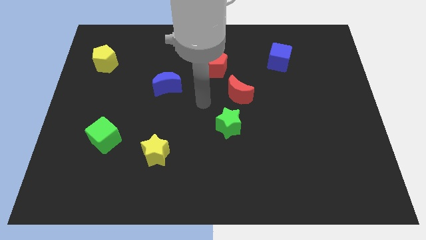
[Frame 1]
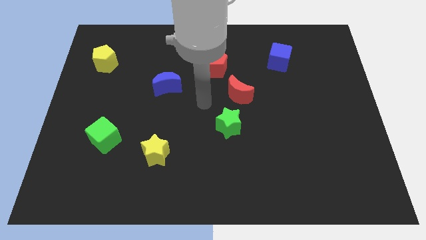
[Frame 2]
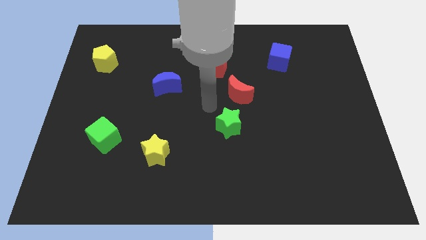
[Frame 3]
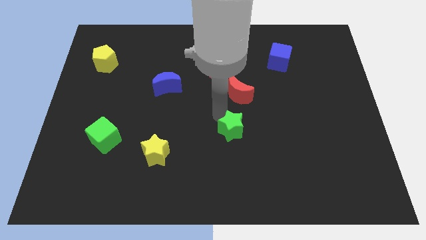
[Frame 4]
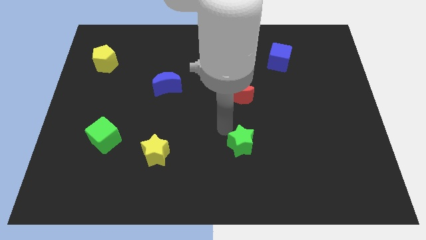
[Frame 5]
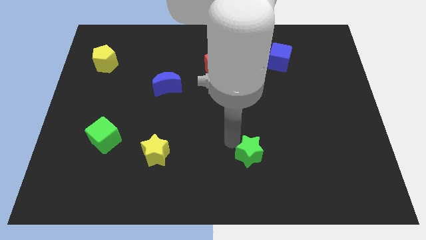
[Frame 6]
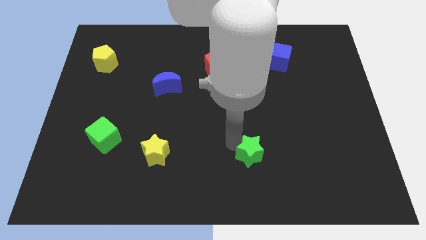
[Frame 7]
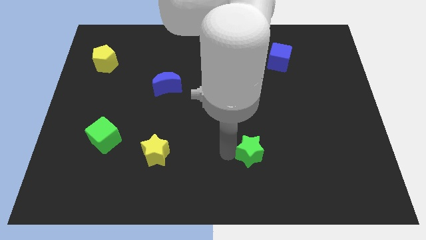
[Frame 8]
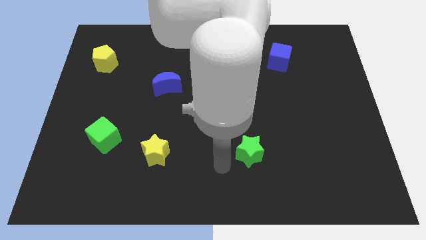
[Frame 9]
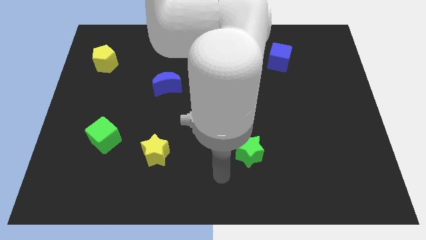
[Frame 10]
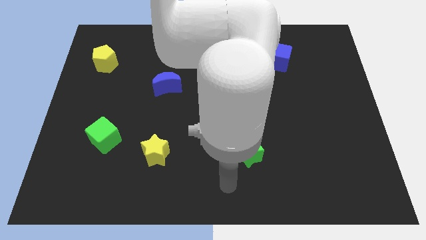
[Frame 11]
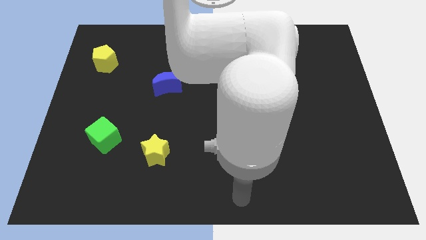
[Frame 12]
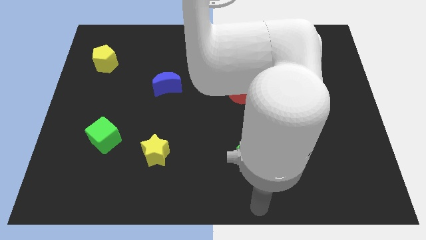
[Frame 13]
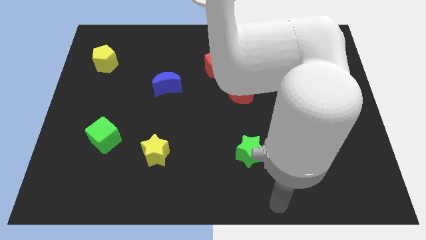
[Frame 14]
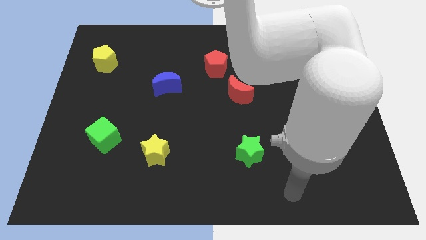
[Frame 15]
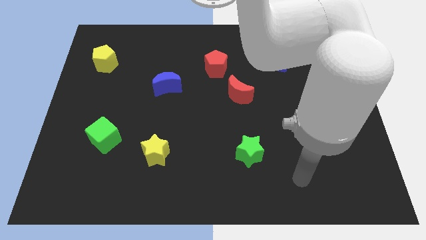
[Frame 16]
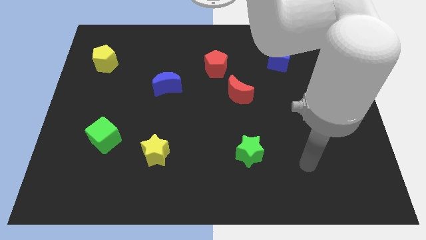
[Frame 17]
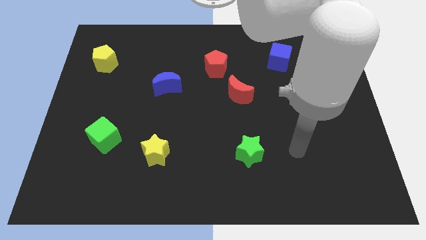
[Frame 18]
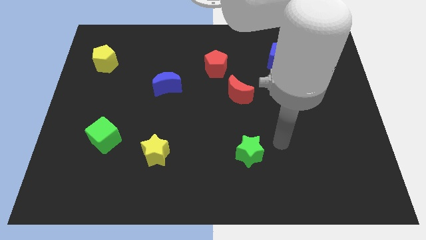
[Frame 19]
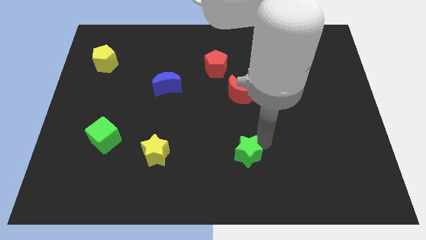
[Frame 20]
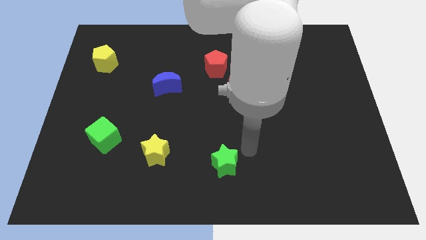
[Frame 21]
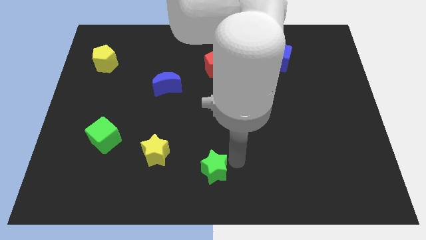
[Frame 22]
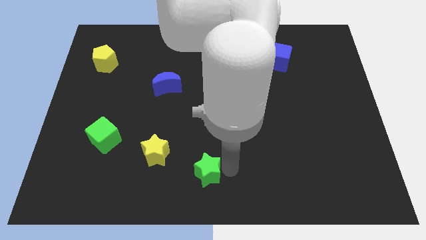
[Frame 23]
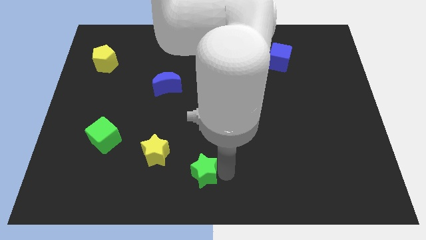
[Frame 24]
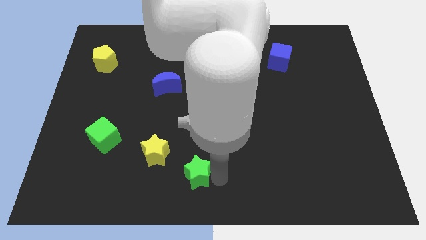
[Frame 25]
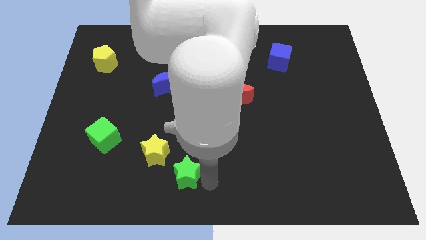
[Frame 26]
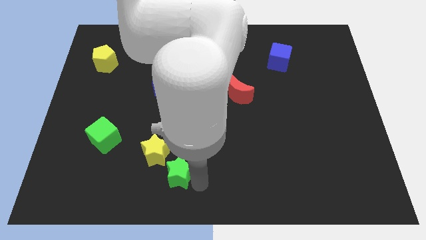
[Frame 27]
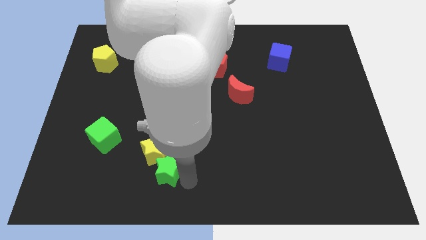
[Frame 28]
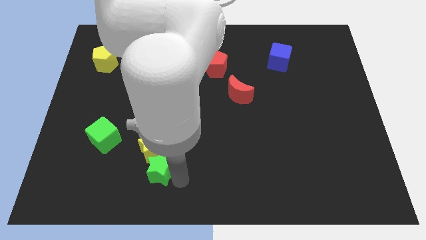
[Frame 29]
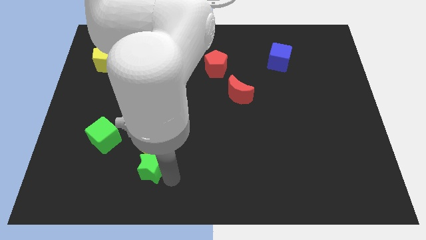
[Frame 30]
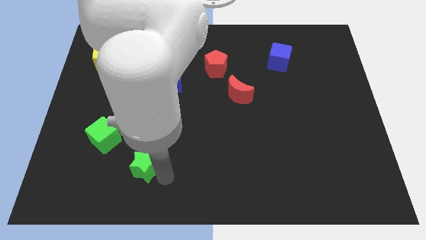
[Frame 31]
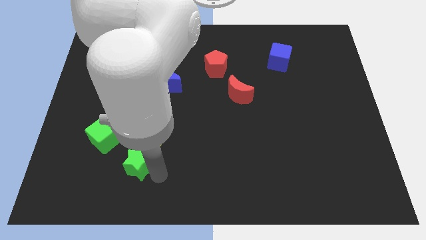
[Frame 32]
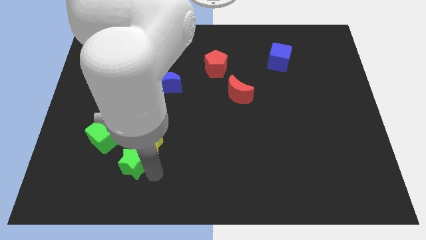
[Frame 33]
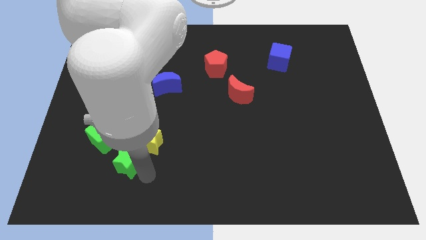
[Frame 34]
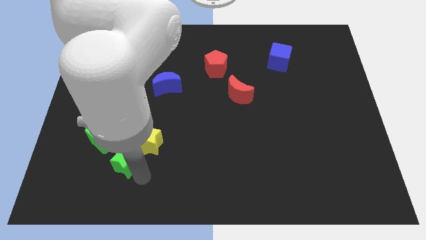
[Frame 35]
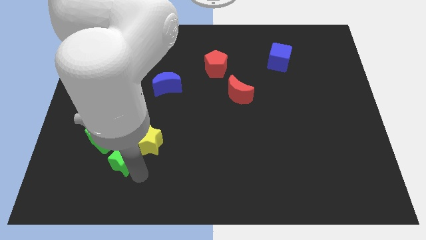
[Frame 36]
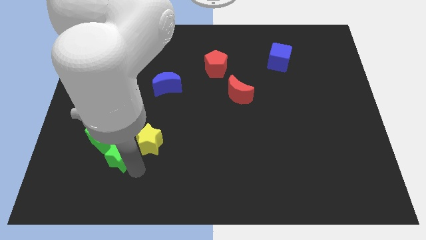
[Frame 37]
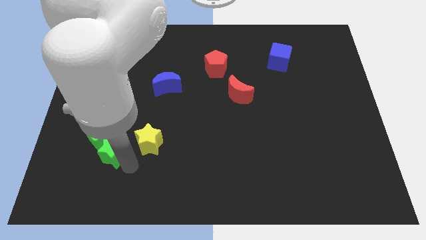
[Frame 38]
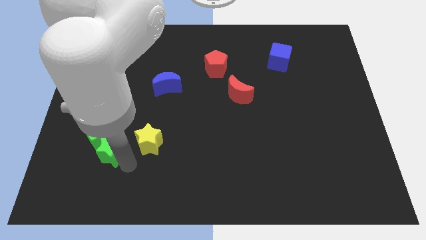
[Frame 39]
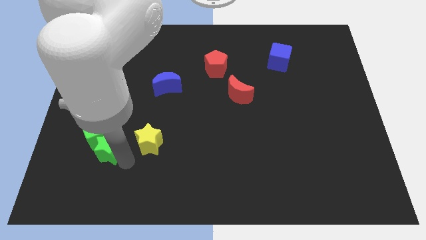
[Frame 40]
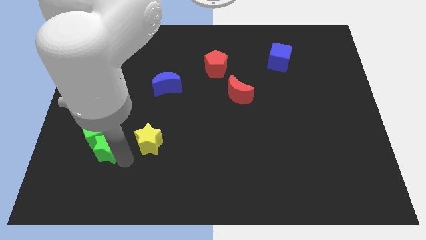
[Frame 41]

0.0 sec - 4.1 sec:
move the green star into the bottom of the green cube

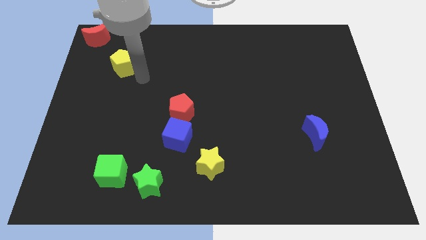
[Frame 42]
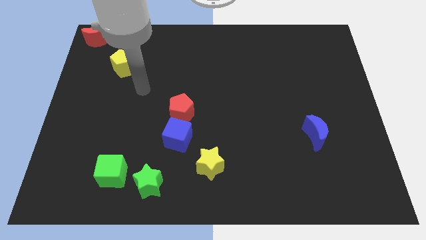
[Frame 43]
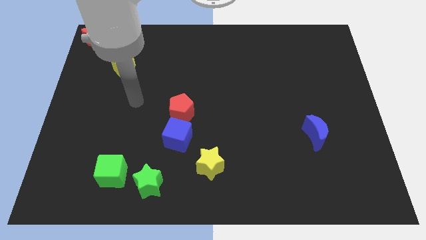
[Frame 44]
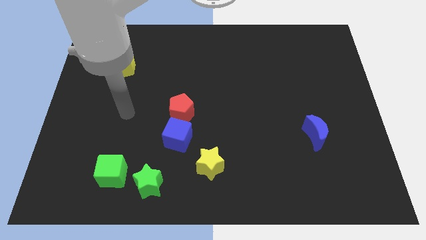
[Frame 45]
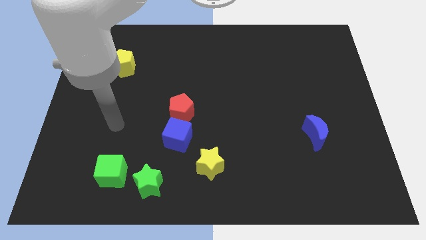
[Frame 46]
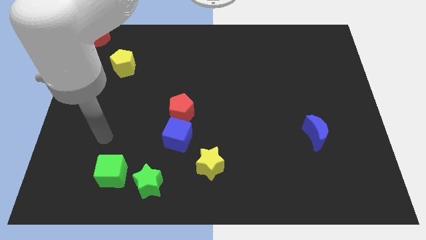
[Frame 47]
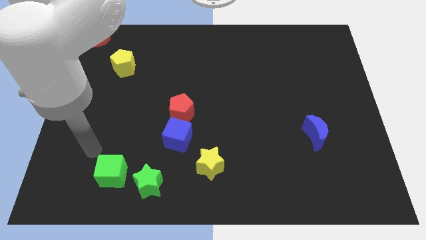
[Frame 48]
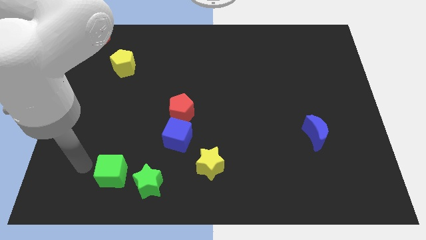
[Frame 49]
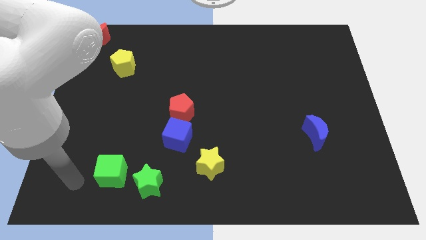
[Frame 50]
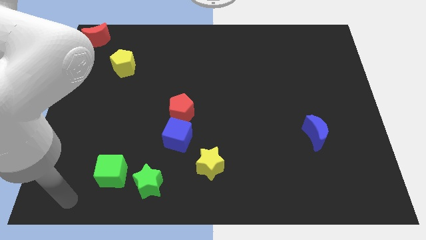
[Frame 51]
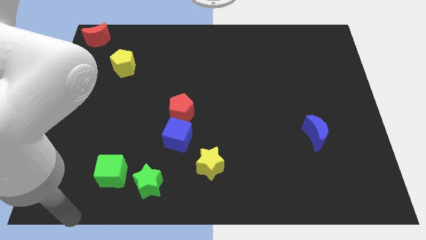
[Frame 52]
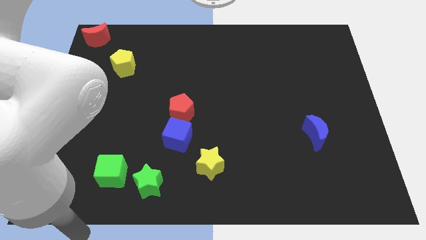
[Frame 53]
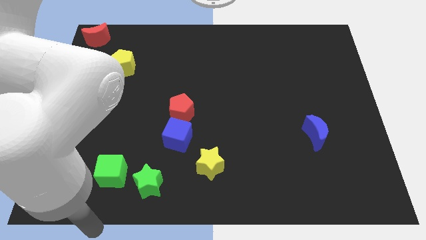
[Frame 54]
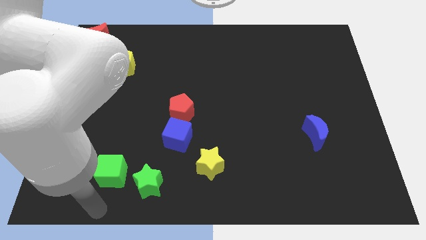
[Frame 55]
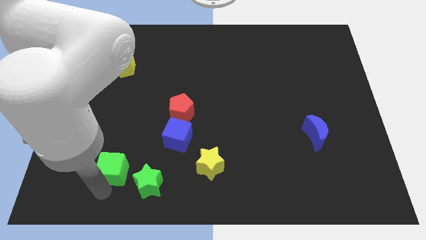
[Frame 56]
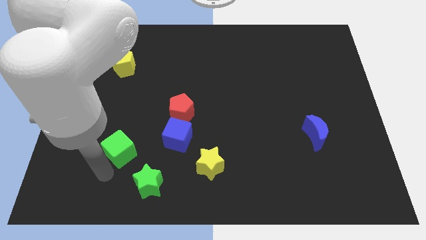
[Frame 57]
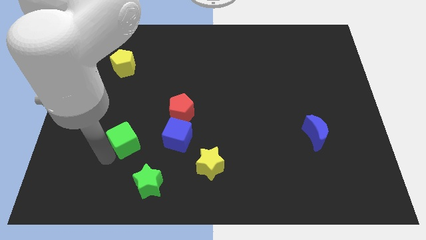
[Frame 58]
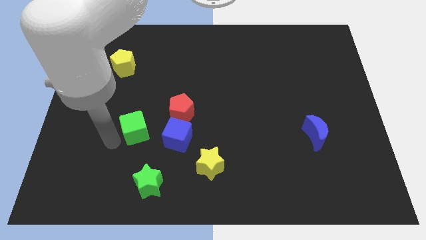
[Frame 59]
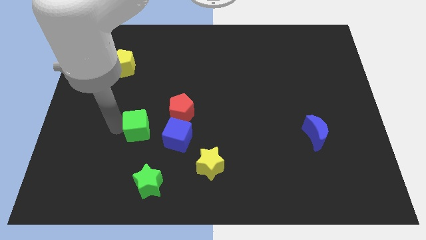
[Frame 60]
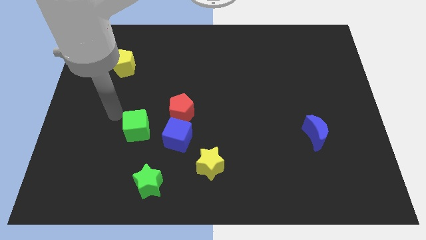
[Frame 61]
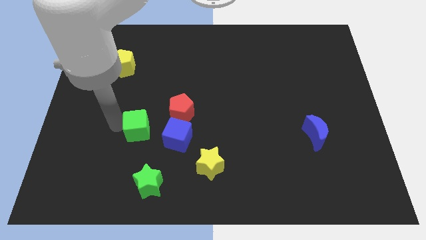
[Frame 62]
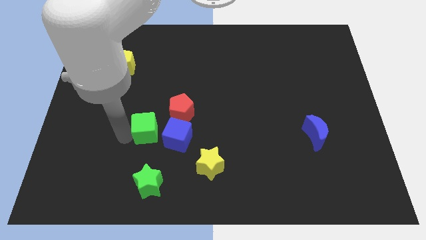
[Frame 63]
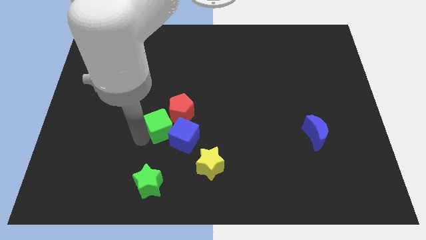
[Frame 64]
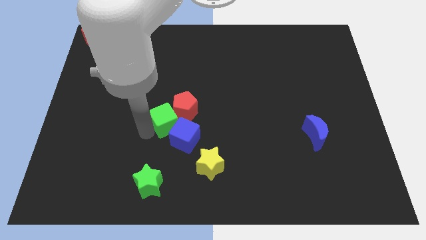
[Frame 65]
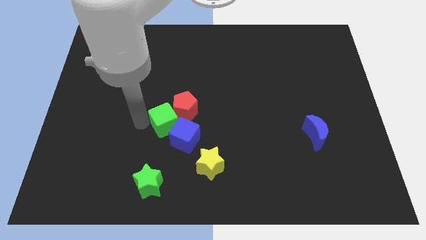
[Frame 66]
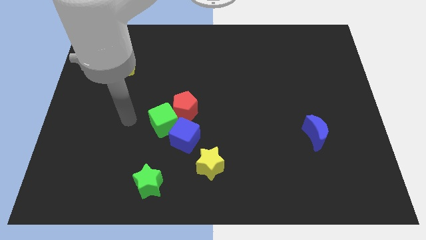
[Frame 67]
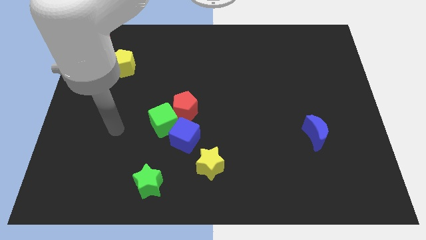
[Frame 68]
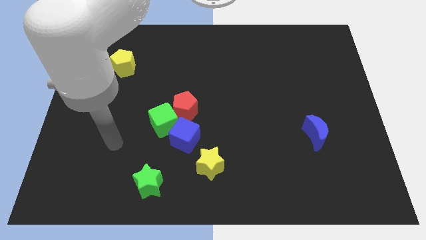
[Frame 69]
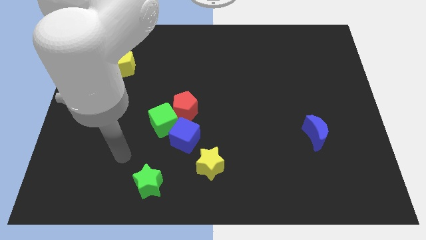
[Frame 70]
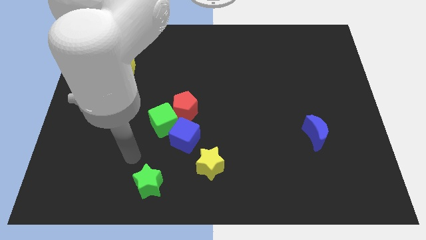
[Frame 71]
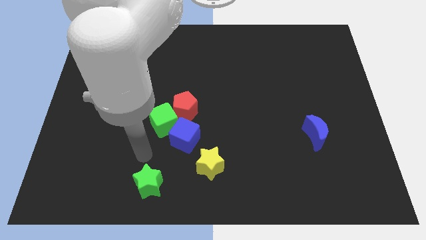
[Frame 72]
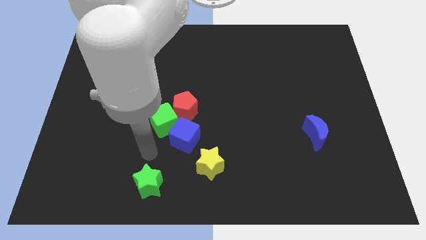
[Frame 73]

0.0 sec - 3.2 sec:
push the green cube into the group of blocks

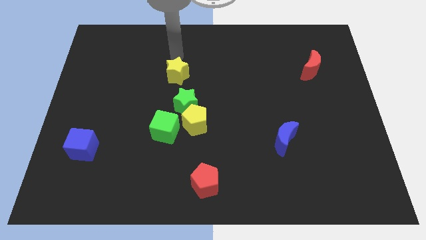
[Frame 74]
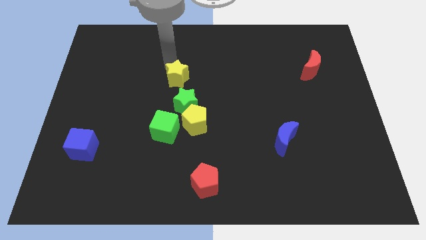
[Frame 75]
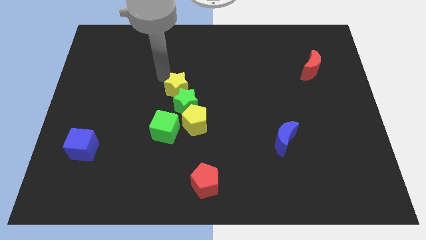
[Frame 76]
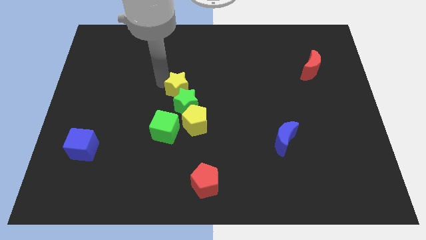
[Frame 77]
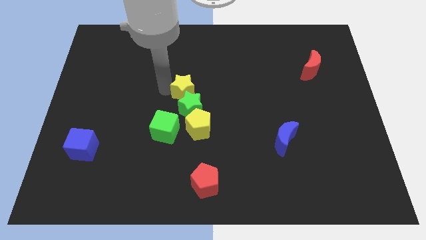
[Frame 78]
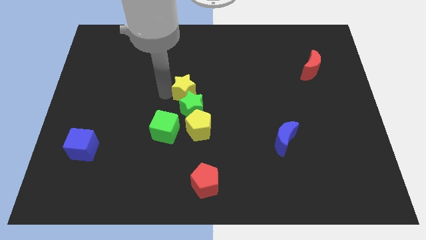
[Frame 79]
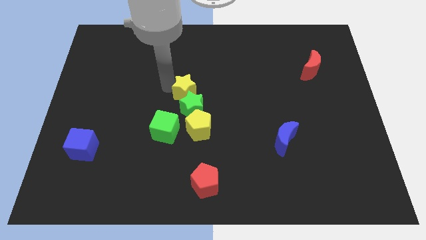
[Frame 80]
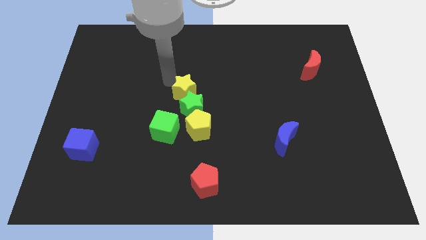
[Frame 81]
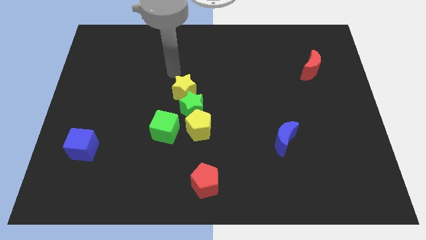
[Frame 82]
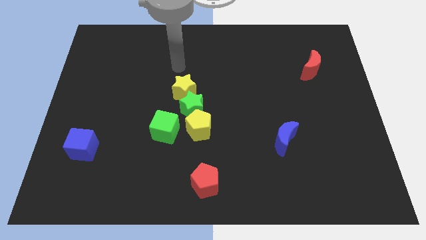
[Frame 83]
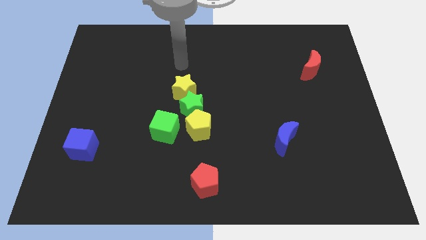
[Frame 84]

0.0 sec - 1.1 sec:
push yellow star along with green star and yellow pentagon

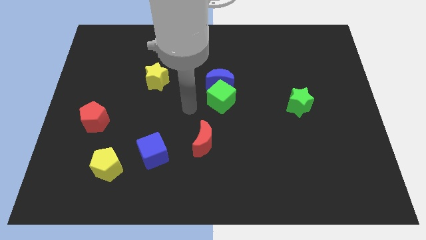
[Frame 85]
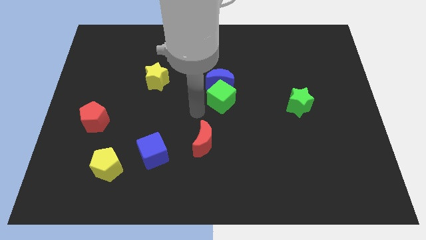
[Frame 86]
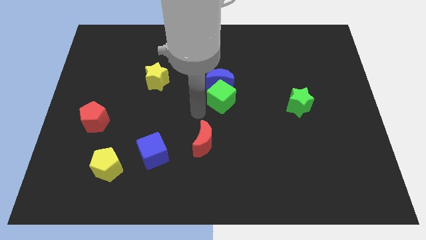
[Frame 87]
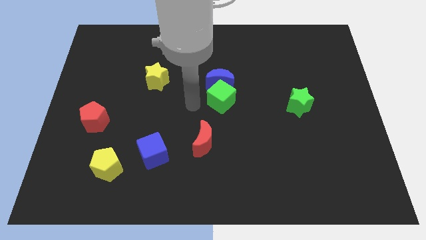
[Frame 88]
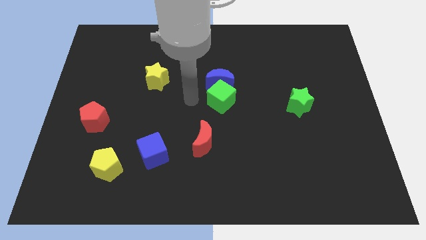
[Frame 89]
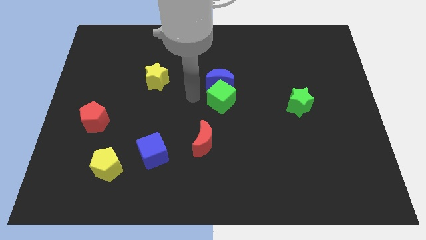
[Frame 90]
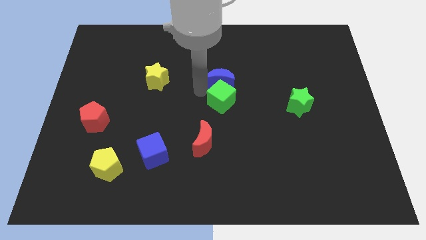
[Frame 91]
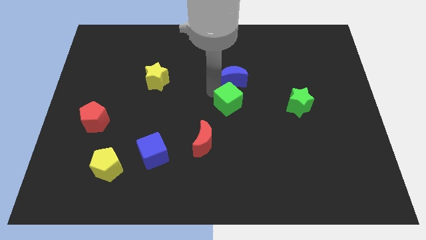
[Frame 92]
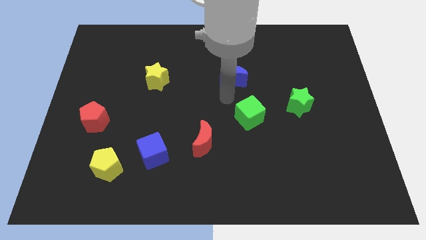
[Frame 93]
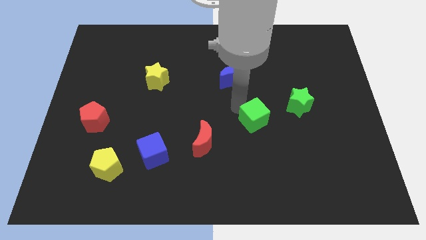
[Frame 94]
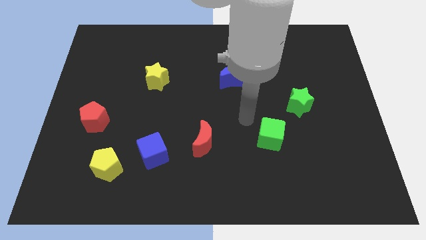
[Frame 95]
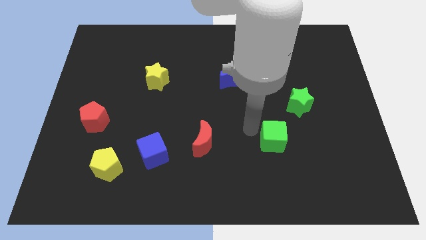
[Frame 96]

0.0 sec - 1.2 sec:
push the green cube away from the blue moon
